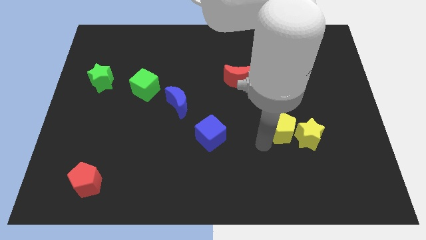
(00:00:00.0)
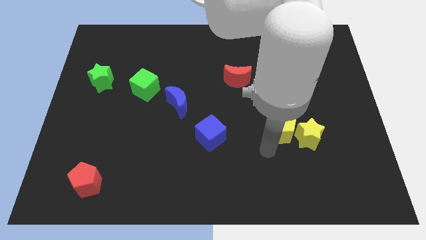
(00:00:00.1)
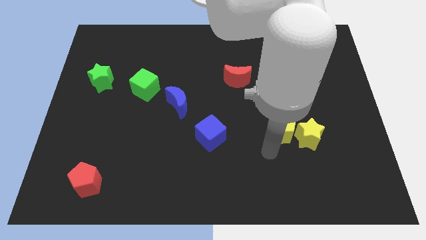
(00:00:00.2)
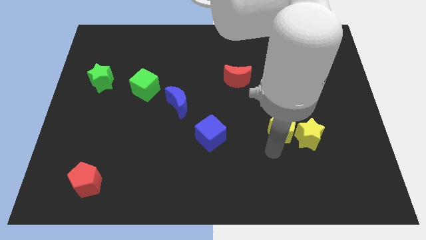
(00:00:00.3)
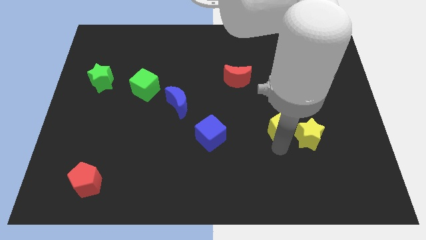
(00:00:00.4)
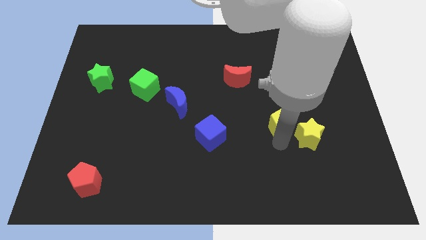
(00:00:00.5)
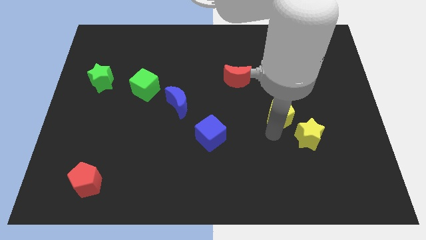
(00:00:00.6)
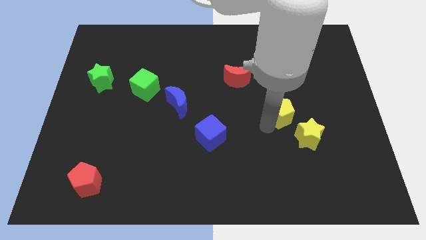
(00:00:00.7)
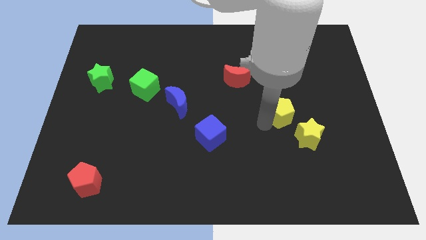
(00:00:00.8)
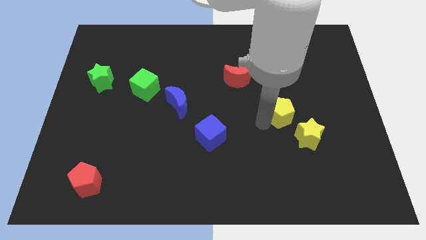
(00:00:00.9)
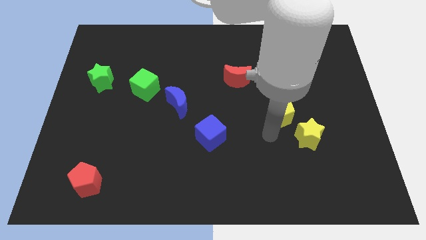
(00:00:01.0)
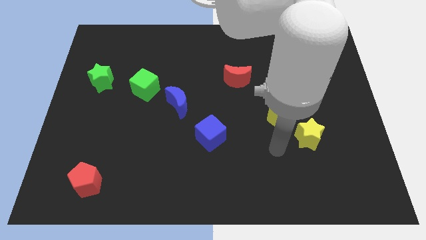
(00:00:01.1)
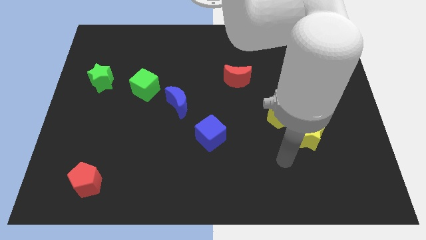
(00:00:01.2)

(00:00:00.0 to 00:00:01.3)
move the yellow pentagon slightly upwards

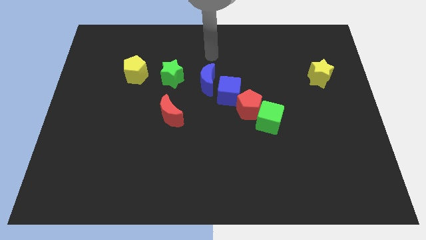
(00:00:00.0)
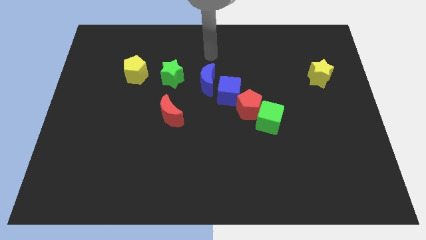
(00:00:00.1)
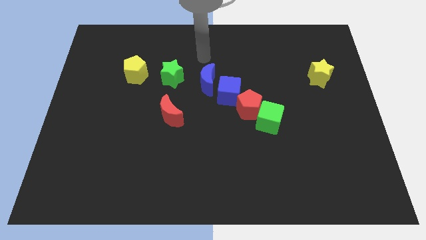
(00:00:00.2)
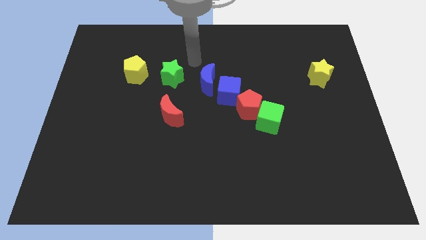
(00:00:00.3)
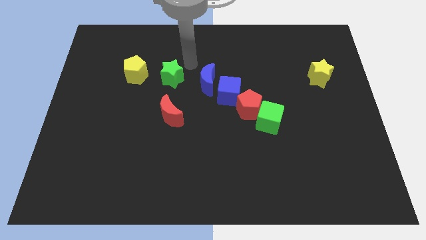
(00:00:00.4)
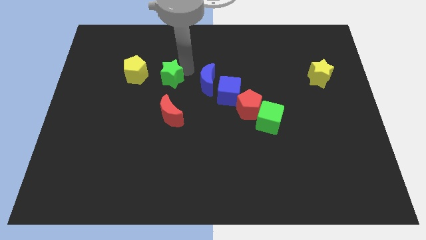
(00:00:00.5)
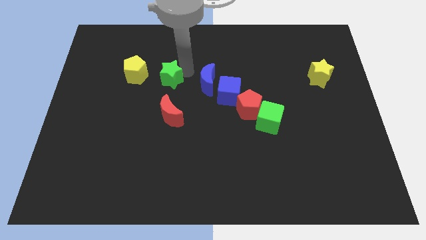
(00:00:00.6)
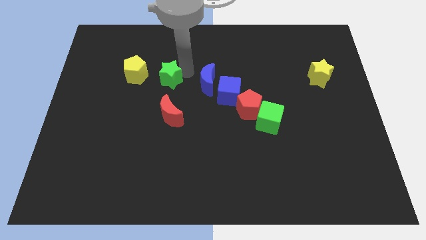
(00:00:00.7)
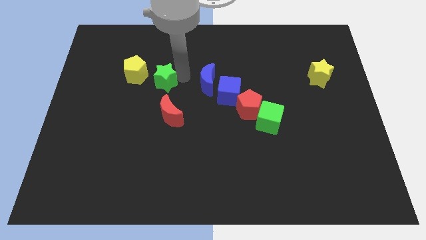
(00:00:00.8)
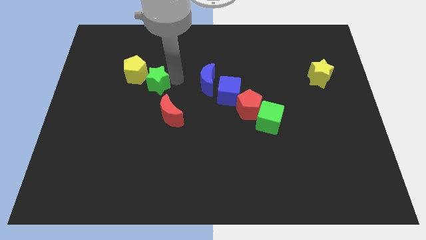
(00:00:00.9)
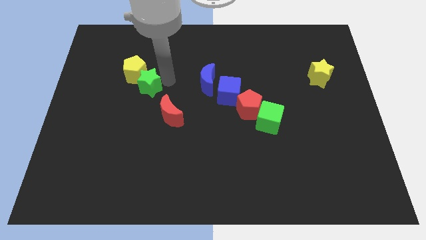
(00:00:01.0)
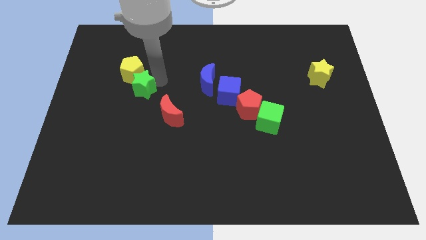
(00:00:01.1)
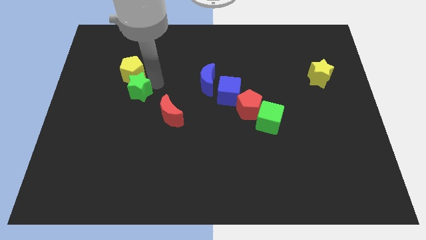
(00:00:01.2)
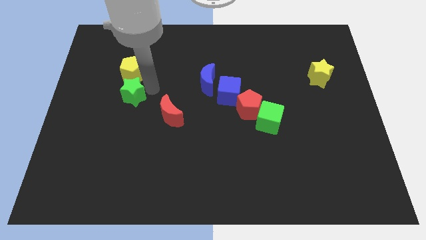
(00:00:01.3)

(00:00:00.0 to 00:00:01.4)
place the green star below the yellow pentagon

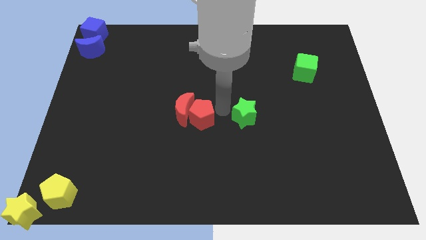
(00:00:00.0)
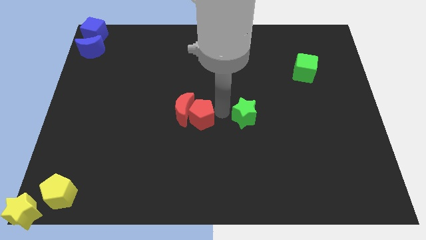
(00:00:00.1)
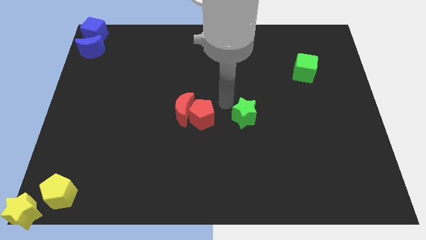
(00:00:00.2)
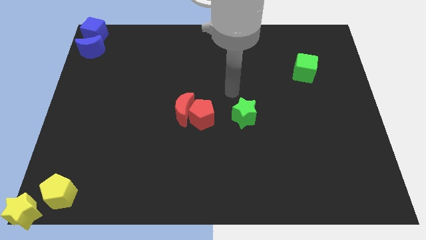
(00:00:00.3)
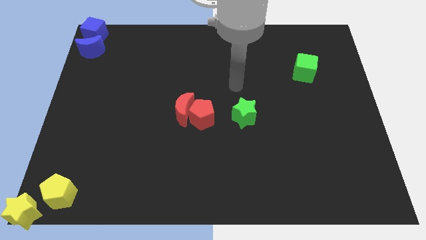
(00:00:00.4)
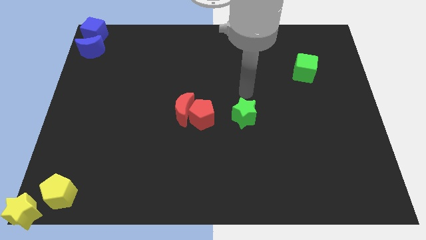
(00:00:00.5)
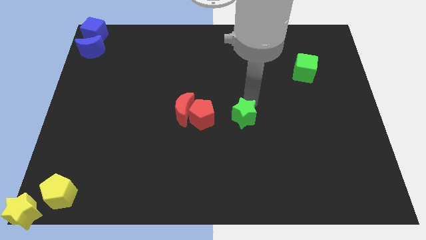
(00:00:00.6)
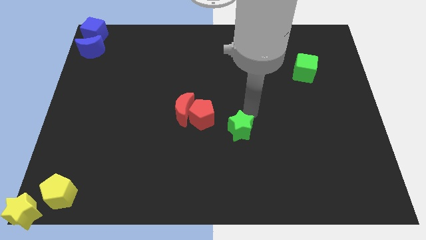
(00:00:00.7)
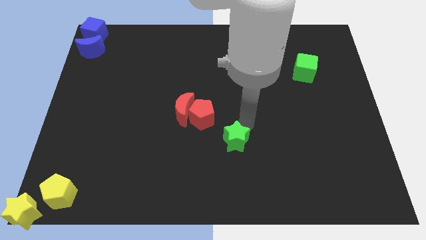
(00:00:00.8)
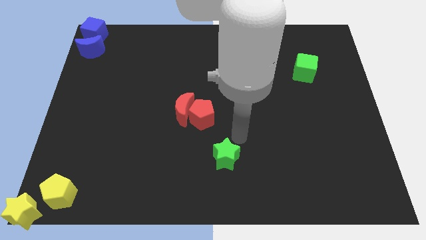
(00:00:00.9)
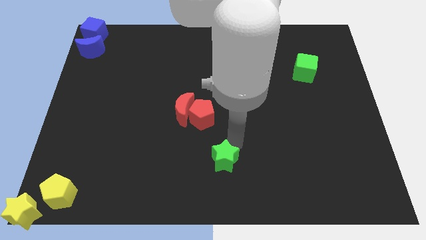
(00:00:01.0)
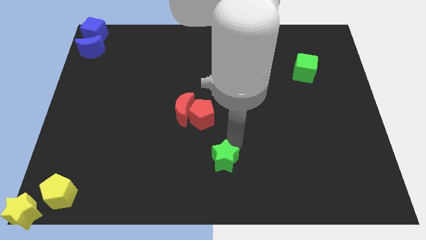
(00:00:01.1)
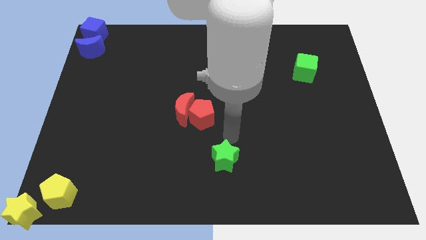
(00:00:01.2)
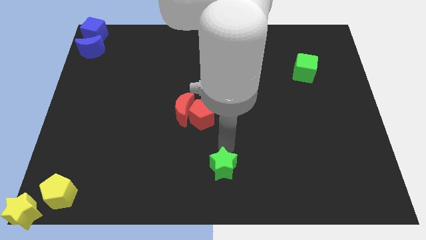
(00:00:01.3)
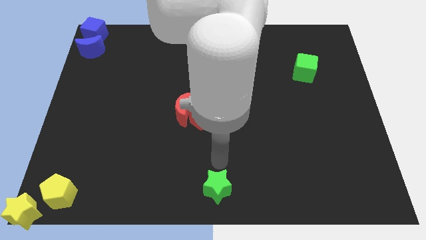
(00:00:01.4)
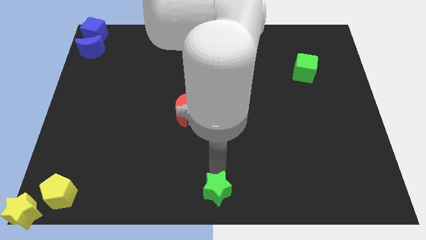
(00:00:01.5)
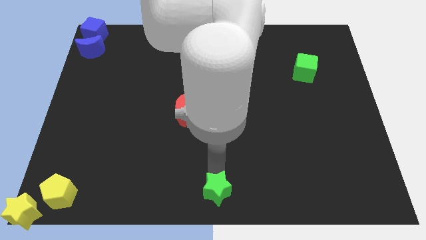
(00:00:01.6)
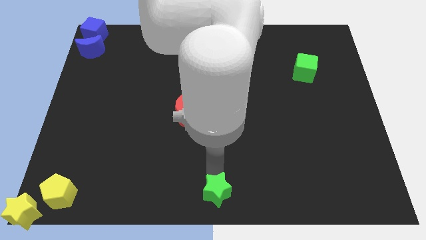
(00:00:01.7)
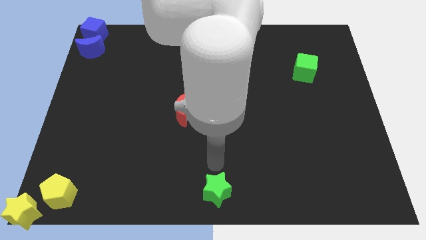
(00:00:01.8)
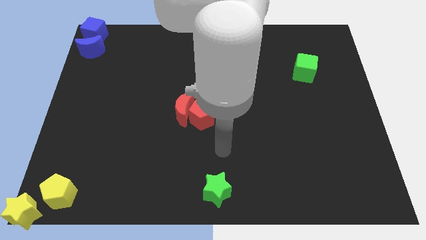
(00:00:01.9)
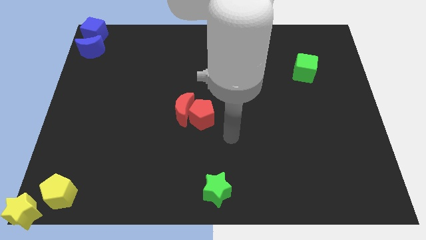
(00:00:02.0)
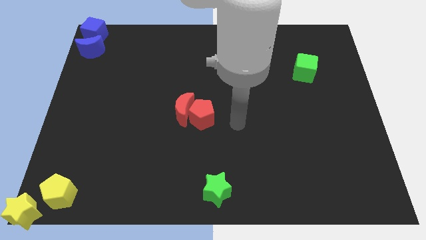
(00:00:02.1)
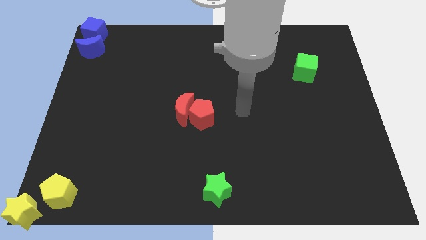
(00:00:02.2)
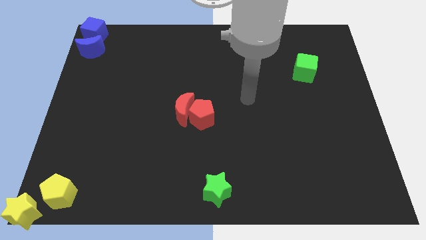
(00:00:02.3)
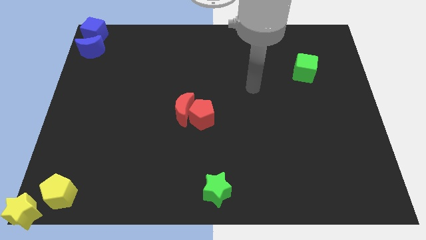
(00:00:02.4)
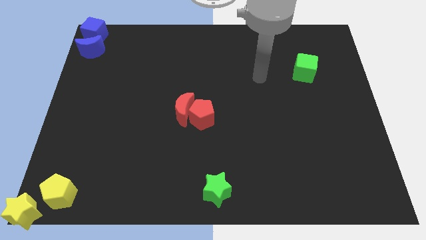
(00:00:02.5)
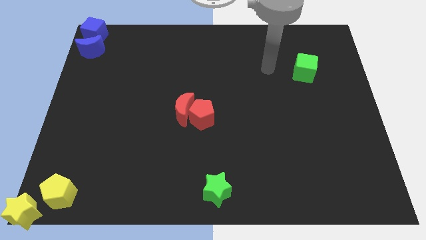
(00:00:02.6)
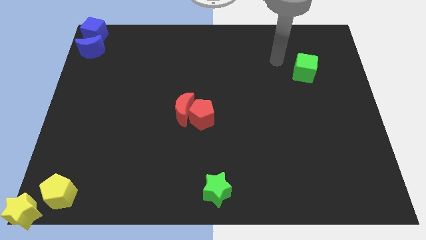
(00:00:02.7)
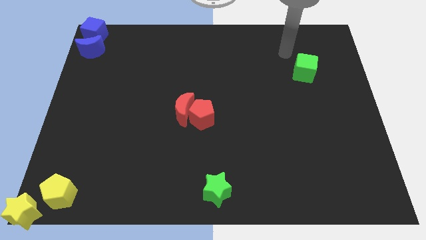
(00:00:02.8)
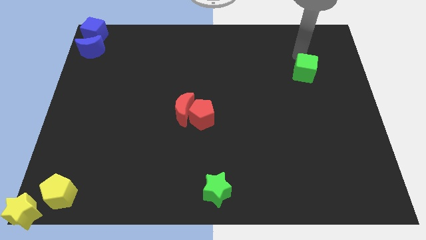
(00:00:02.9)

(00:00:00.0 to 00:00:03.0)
move the green star towards the bottom center of the board

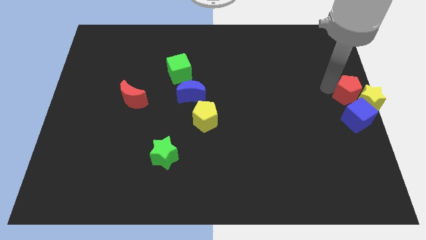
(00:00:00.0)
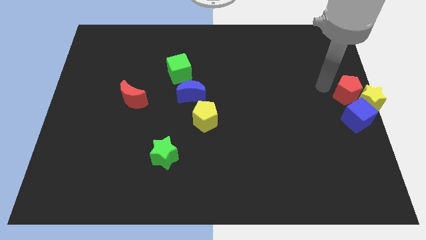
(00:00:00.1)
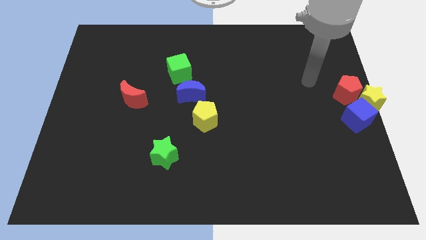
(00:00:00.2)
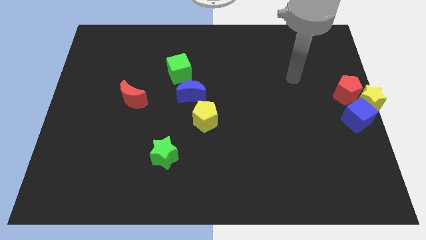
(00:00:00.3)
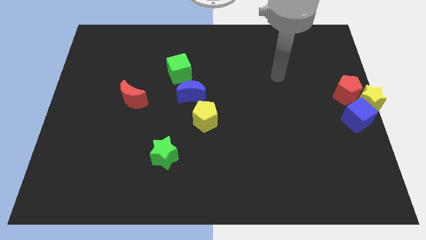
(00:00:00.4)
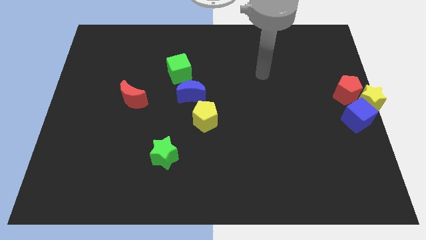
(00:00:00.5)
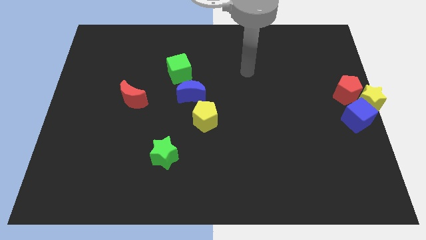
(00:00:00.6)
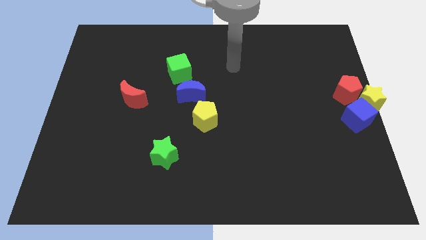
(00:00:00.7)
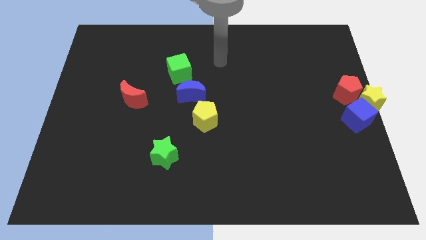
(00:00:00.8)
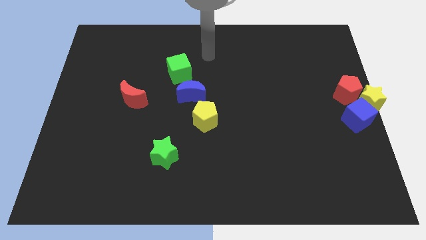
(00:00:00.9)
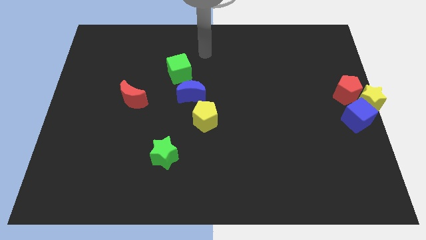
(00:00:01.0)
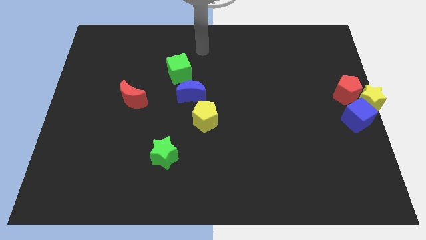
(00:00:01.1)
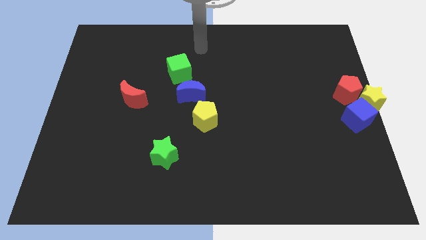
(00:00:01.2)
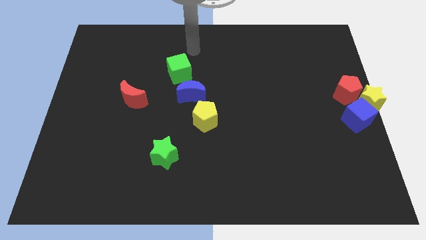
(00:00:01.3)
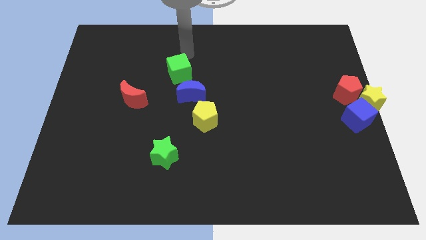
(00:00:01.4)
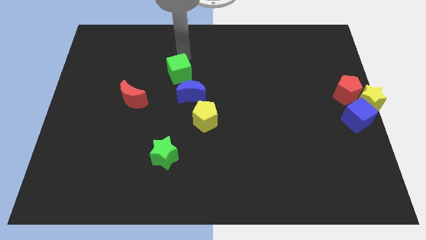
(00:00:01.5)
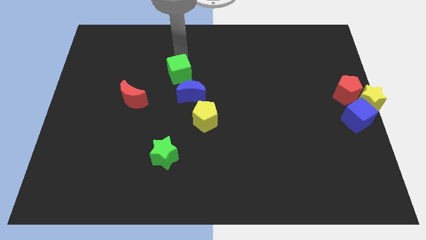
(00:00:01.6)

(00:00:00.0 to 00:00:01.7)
move your arm at the top of the green cube

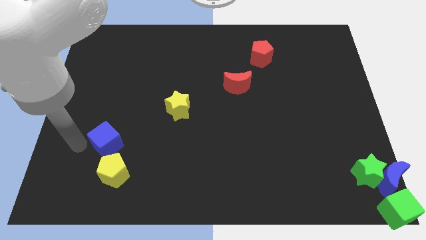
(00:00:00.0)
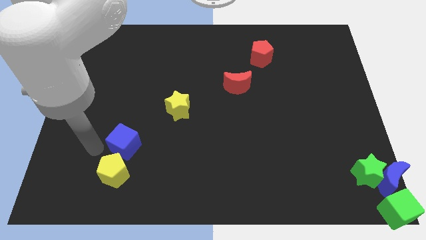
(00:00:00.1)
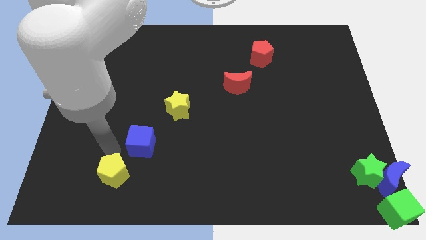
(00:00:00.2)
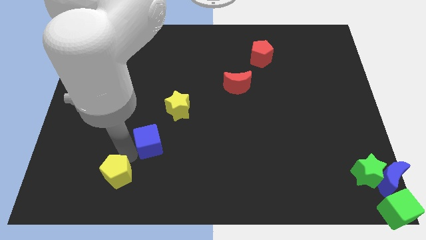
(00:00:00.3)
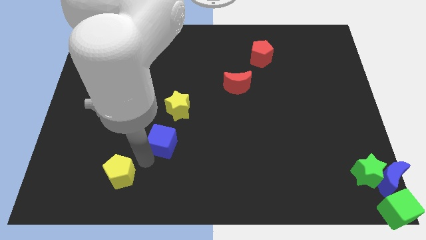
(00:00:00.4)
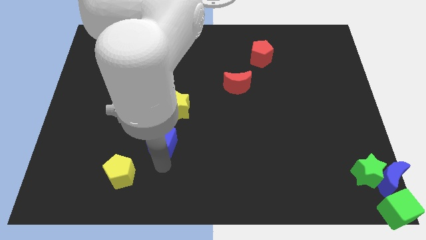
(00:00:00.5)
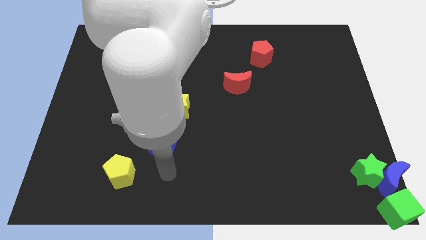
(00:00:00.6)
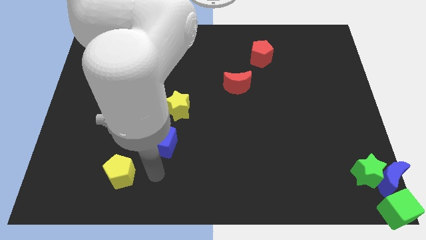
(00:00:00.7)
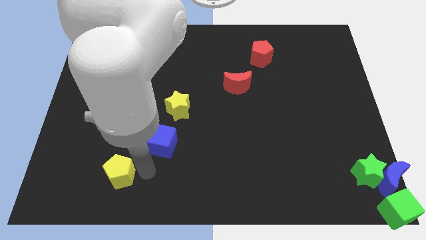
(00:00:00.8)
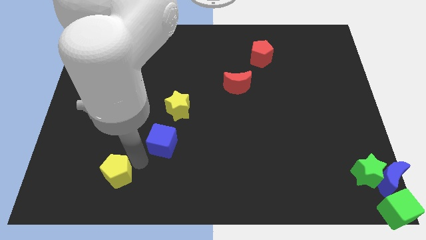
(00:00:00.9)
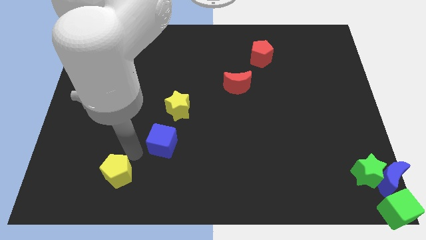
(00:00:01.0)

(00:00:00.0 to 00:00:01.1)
push the blue cube to the bottom of the yellow star

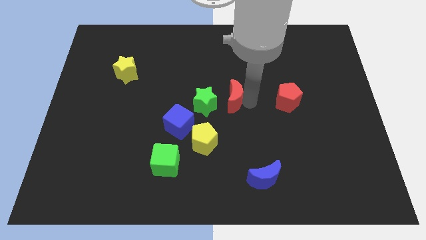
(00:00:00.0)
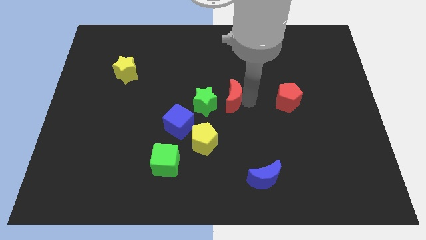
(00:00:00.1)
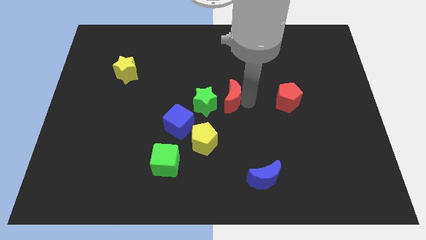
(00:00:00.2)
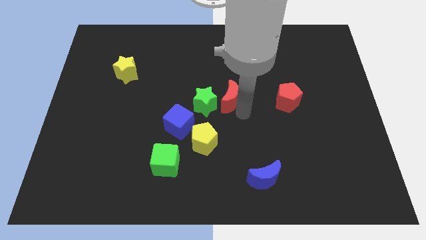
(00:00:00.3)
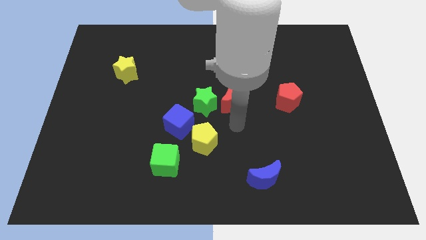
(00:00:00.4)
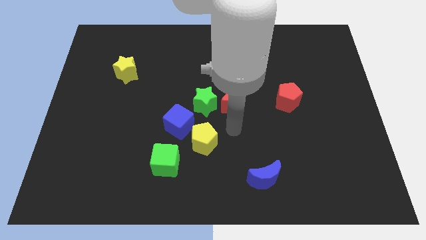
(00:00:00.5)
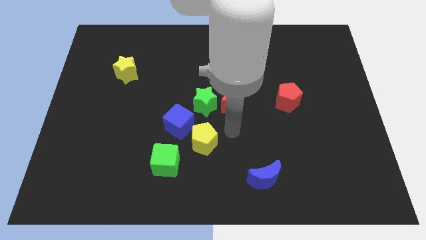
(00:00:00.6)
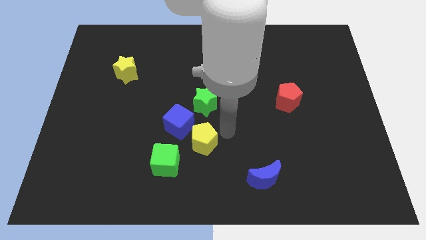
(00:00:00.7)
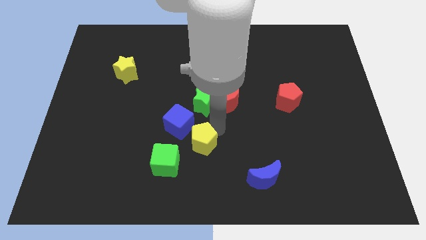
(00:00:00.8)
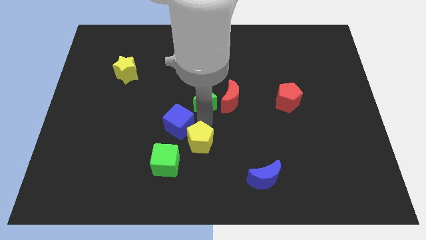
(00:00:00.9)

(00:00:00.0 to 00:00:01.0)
put your arm to the top of yellow pentagon
